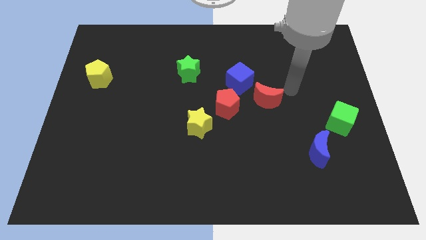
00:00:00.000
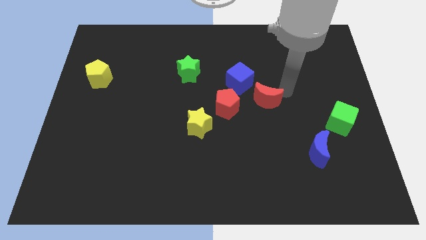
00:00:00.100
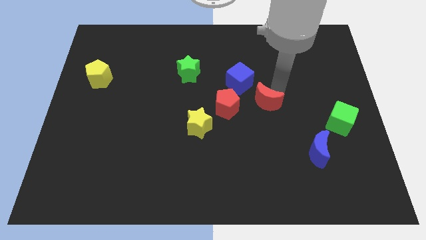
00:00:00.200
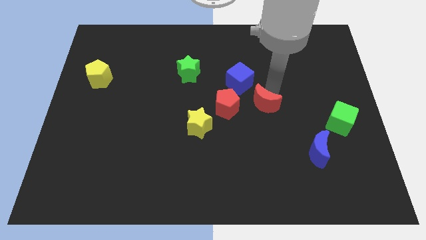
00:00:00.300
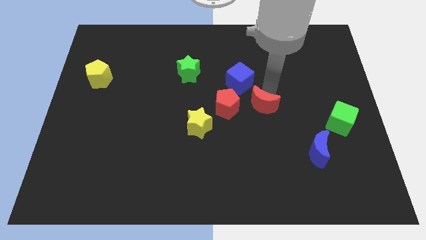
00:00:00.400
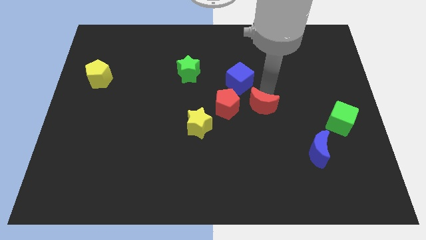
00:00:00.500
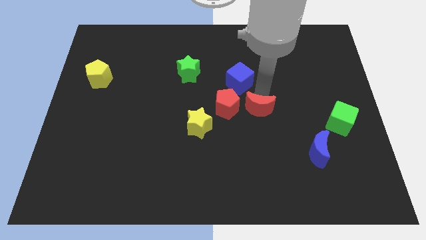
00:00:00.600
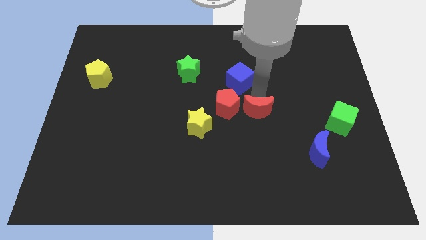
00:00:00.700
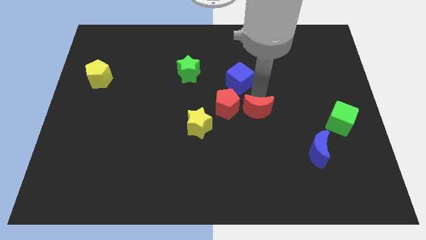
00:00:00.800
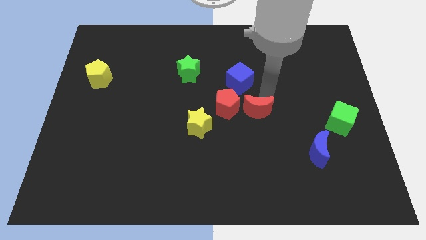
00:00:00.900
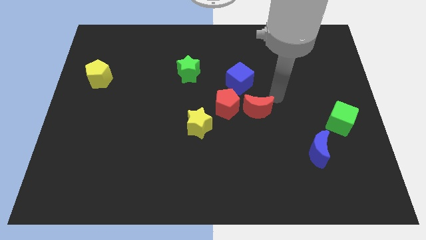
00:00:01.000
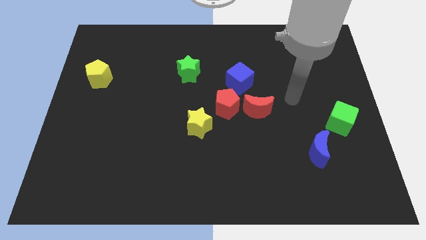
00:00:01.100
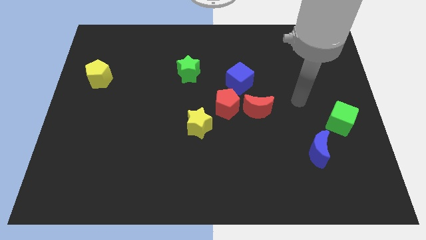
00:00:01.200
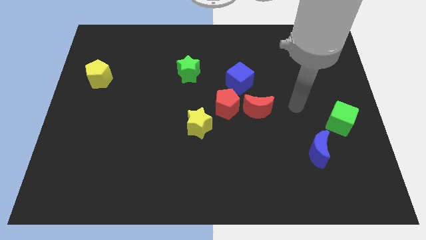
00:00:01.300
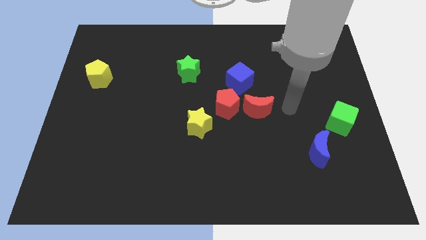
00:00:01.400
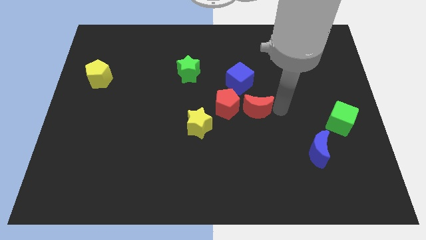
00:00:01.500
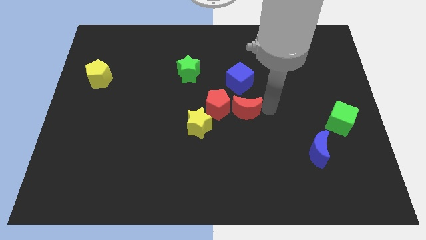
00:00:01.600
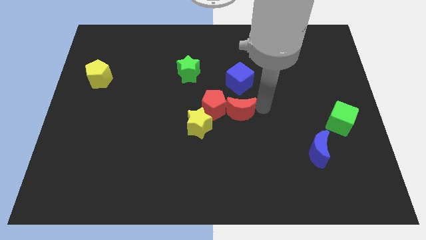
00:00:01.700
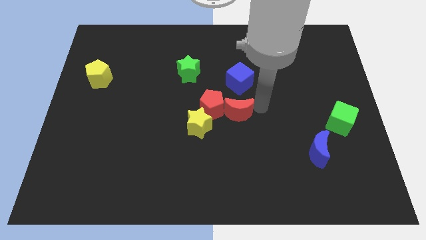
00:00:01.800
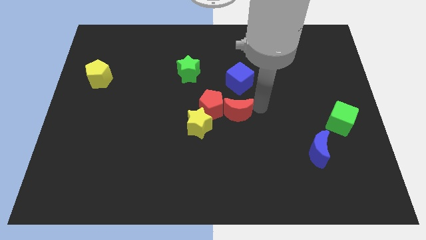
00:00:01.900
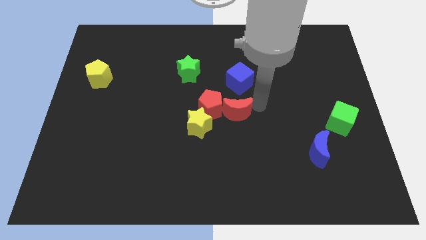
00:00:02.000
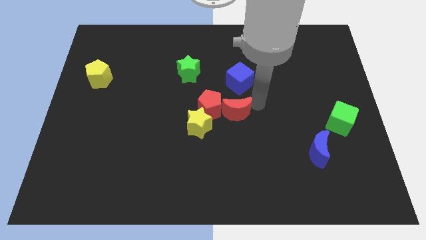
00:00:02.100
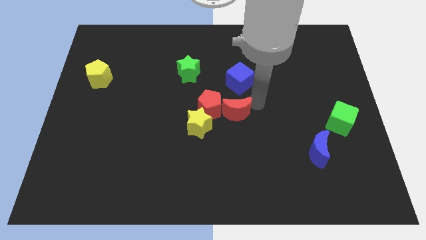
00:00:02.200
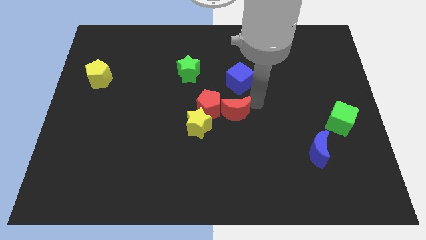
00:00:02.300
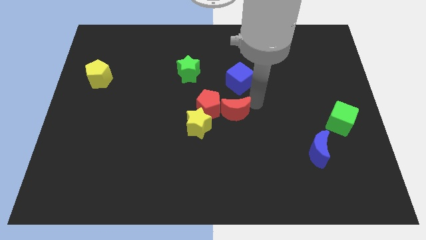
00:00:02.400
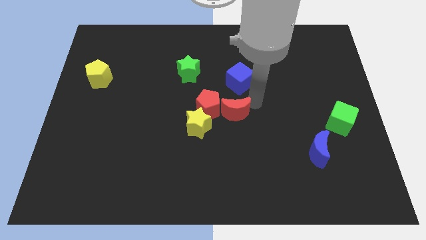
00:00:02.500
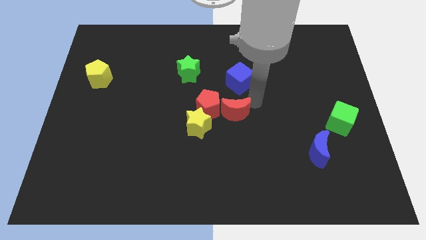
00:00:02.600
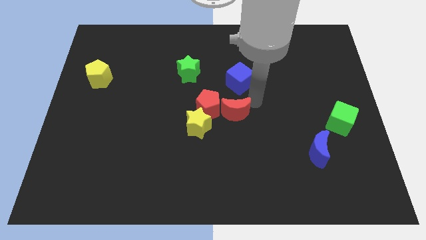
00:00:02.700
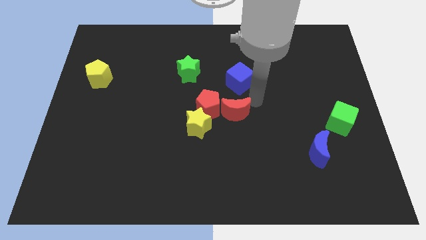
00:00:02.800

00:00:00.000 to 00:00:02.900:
push the red crescent into red pentagon

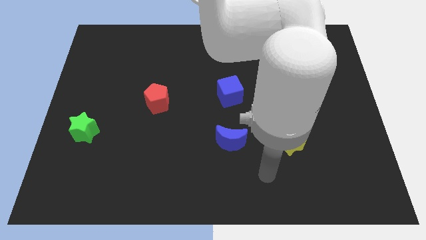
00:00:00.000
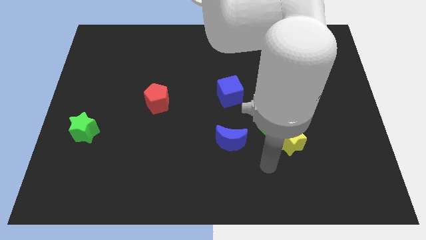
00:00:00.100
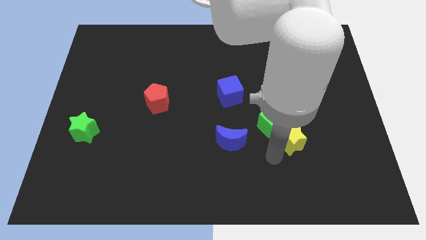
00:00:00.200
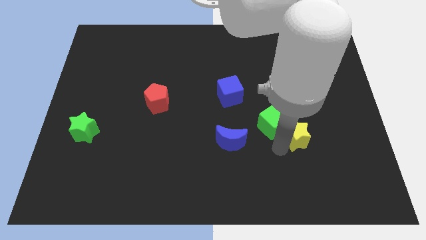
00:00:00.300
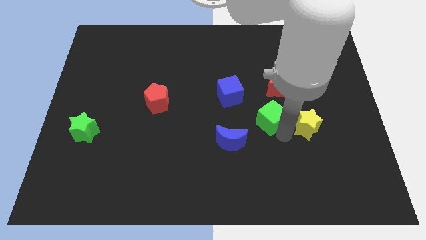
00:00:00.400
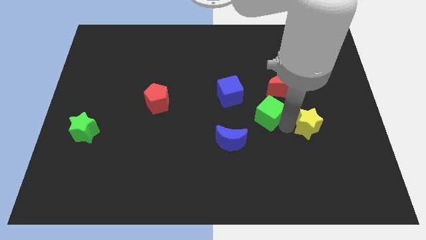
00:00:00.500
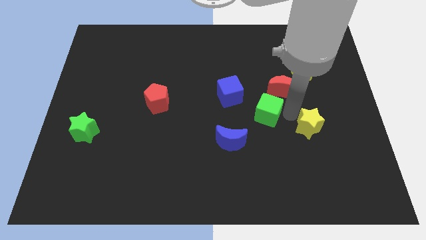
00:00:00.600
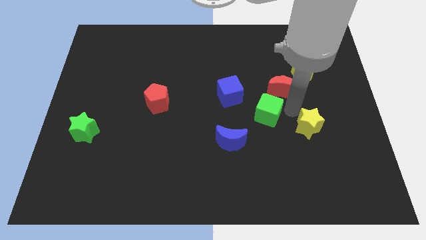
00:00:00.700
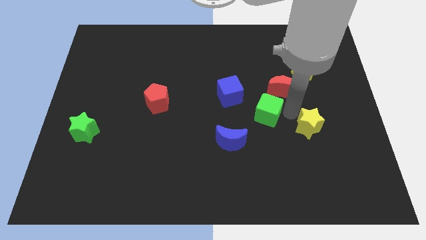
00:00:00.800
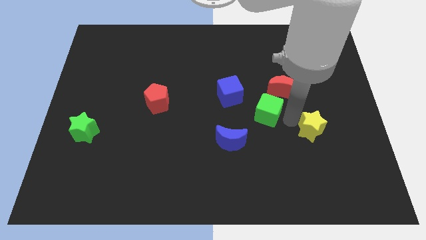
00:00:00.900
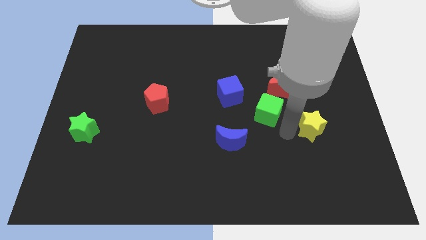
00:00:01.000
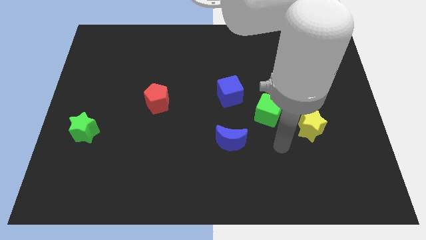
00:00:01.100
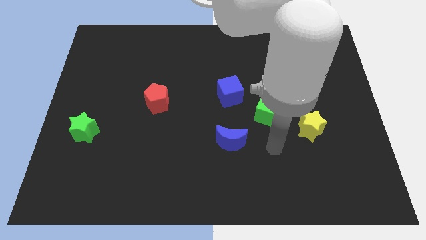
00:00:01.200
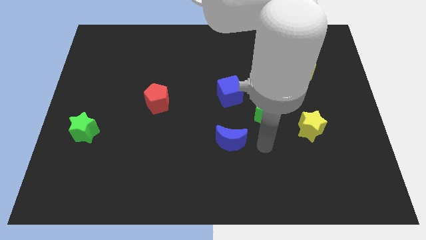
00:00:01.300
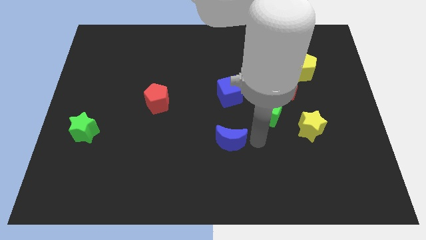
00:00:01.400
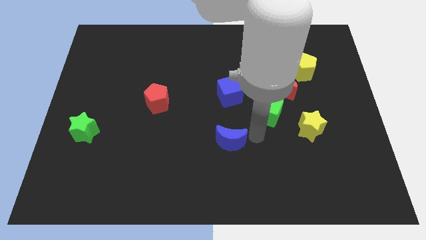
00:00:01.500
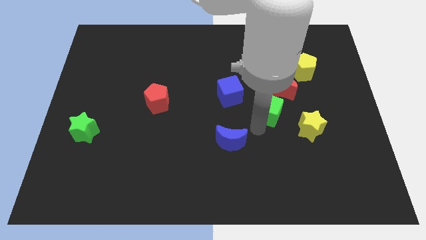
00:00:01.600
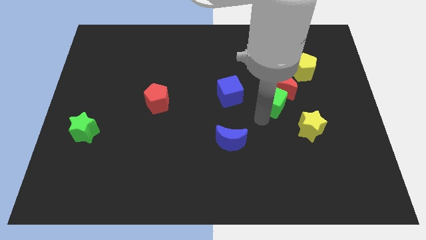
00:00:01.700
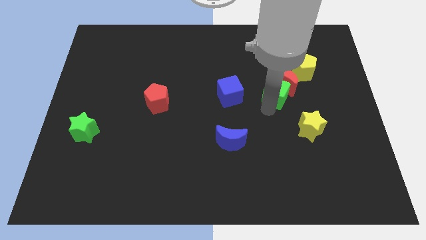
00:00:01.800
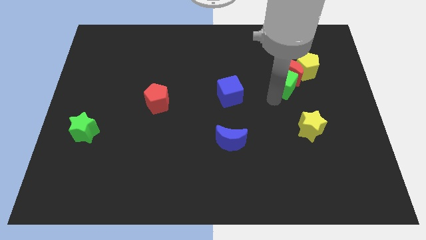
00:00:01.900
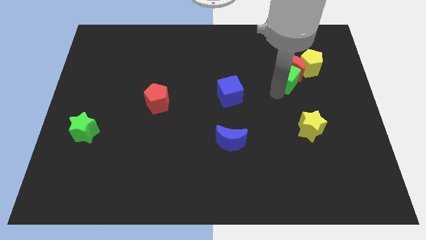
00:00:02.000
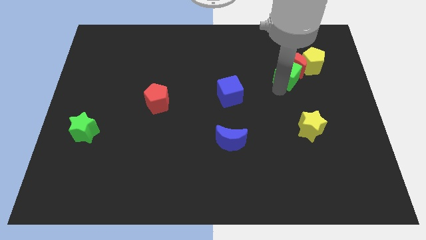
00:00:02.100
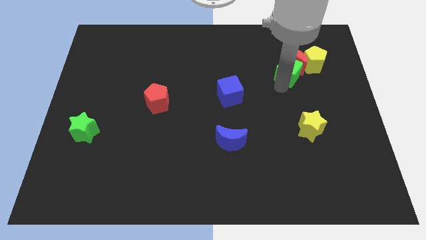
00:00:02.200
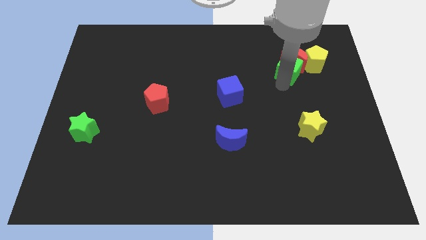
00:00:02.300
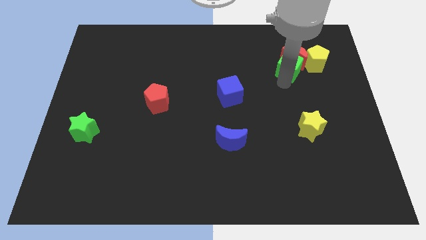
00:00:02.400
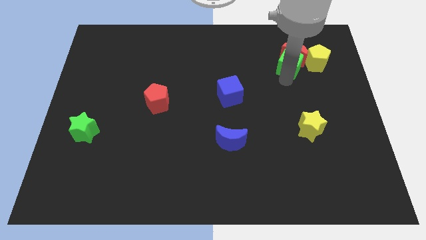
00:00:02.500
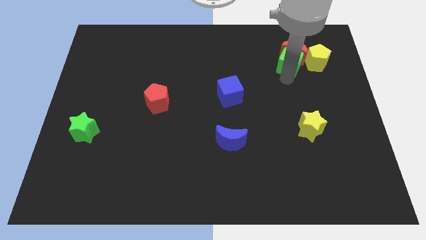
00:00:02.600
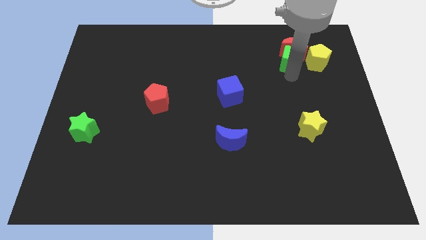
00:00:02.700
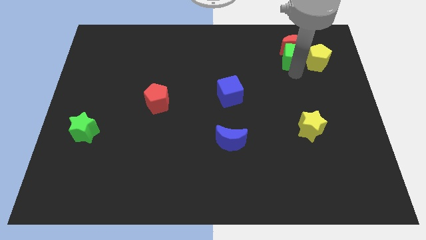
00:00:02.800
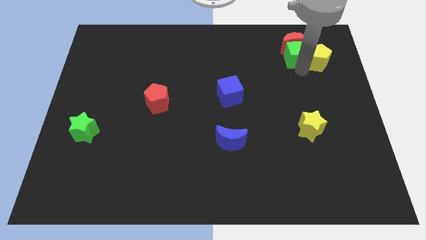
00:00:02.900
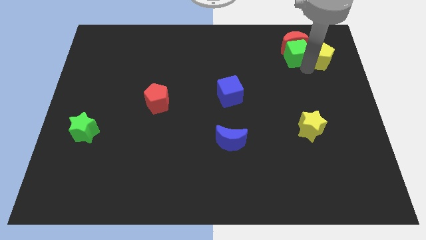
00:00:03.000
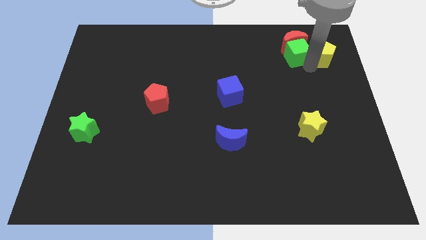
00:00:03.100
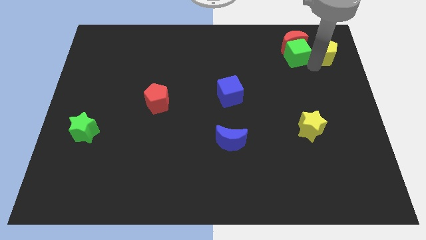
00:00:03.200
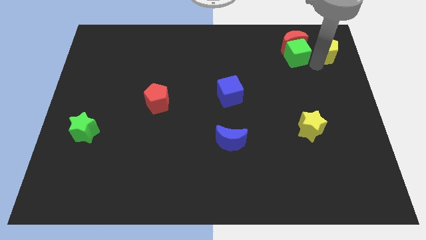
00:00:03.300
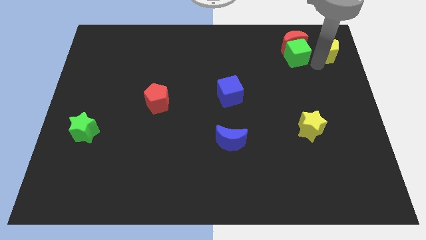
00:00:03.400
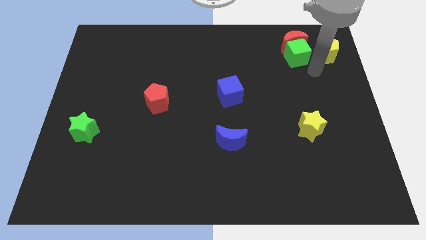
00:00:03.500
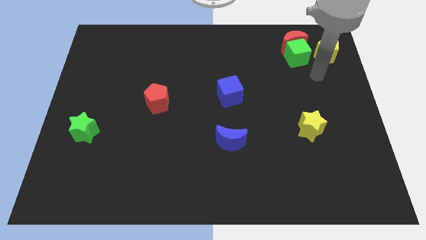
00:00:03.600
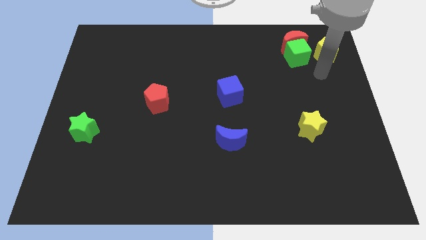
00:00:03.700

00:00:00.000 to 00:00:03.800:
push the green cube and red crescent to the top right

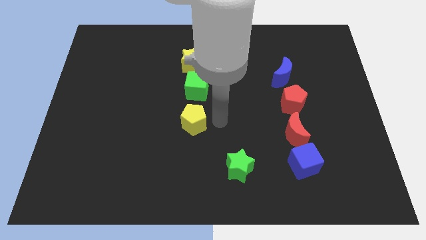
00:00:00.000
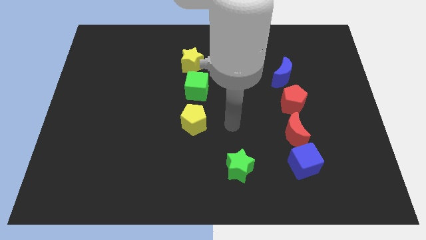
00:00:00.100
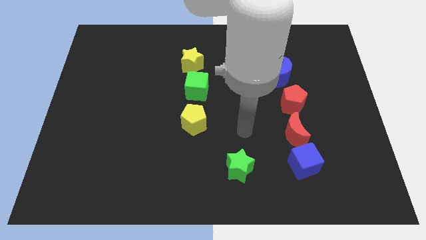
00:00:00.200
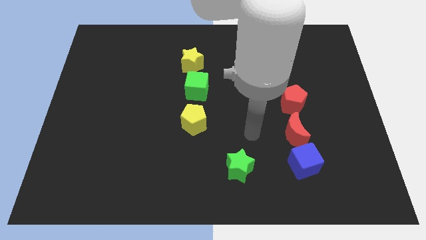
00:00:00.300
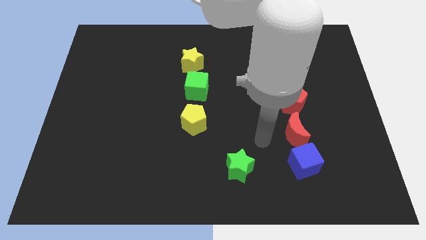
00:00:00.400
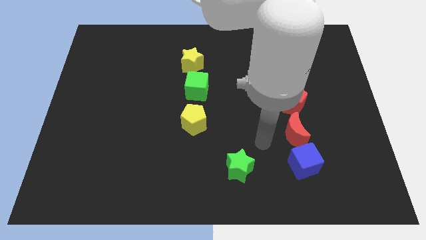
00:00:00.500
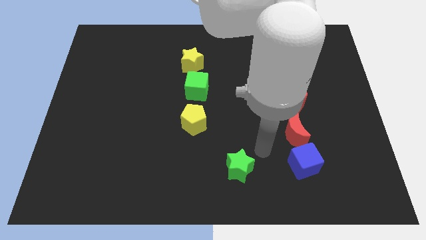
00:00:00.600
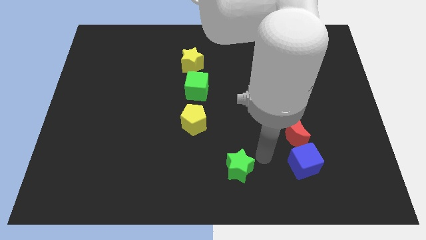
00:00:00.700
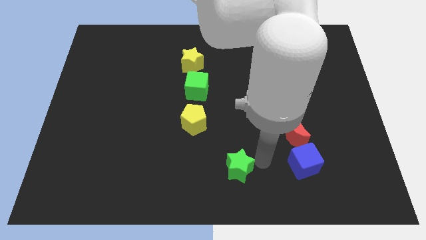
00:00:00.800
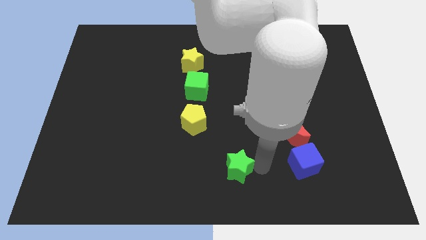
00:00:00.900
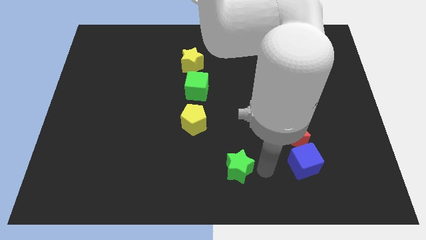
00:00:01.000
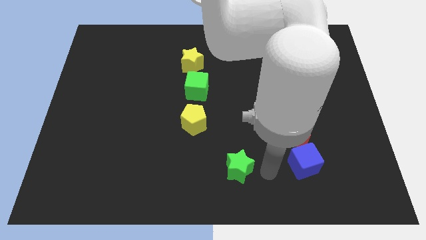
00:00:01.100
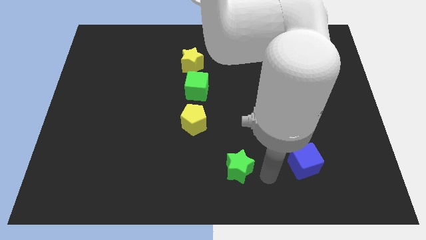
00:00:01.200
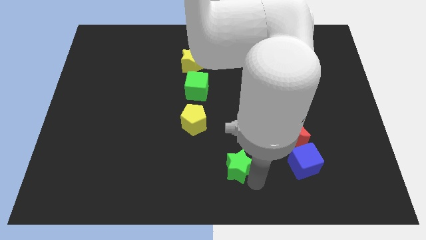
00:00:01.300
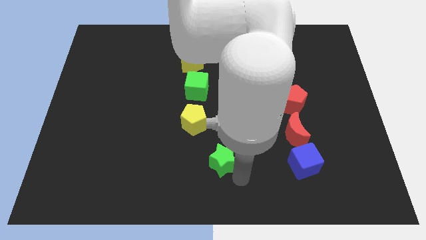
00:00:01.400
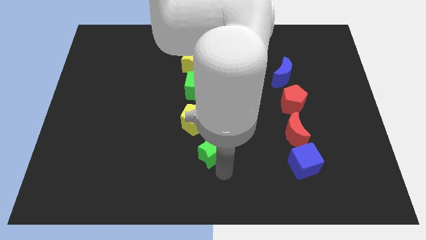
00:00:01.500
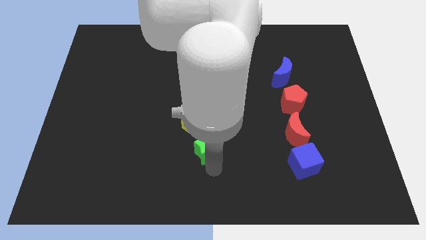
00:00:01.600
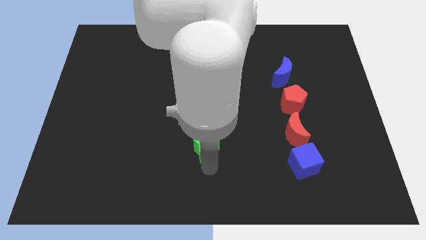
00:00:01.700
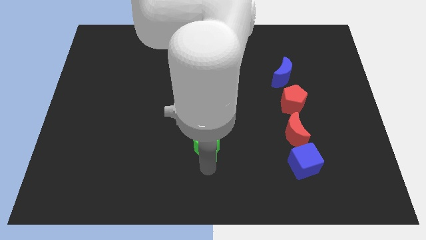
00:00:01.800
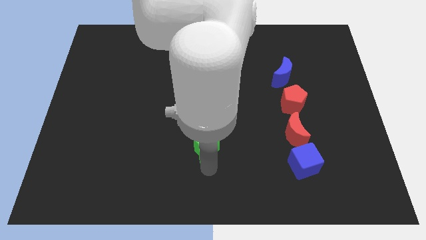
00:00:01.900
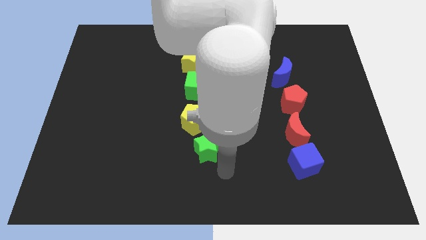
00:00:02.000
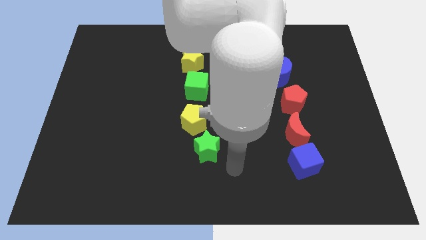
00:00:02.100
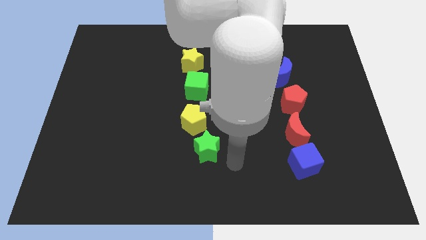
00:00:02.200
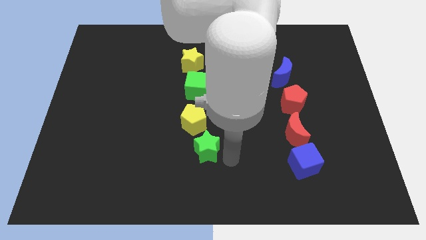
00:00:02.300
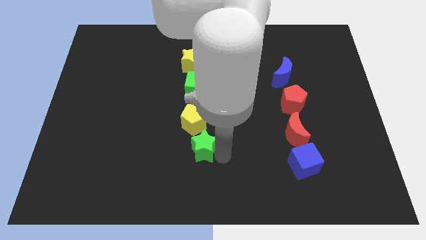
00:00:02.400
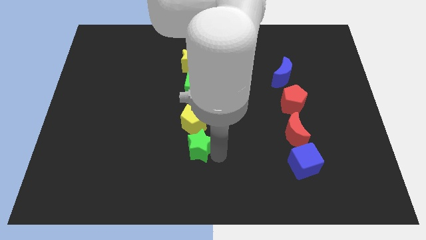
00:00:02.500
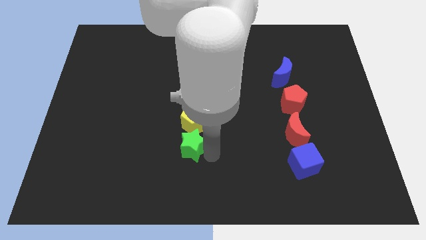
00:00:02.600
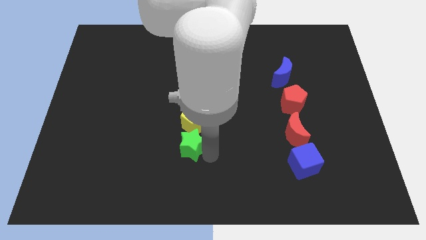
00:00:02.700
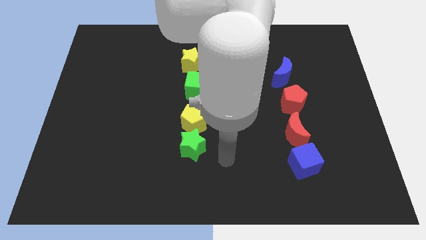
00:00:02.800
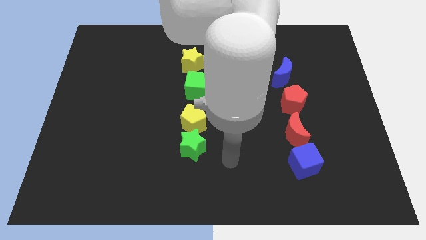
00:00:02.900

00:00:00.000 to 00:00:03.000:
move the green star below the yellow pentagon
